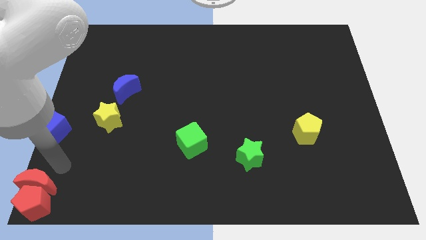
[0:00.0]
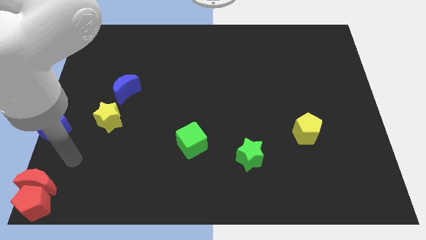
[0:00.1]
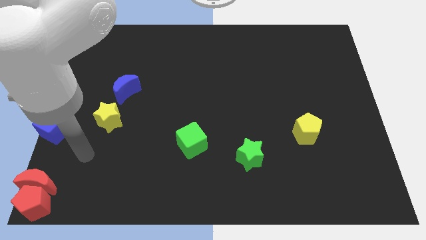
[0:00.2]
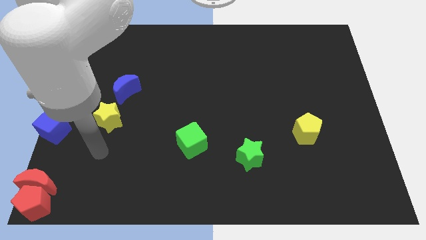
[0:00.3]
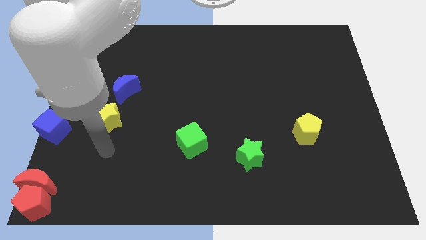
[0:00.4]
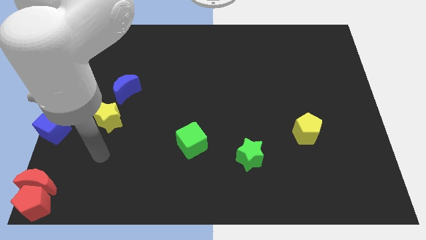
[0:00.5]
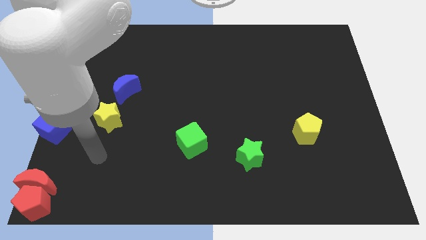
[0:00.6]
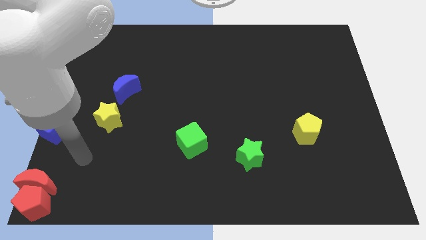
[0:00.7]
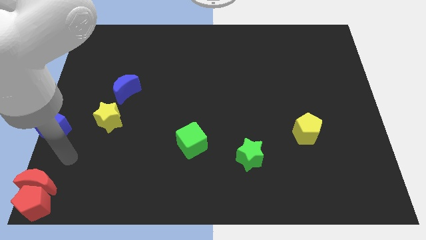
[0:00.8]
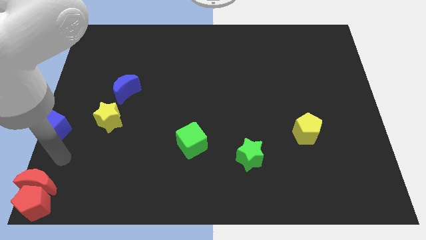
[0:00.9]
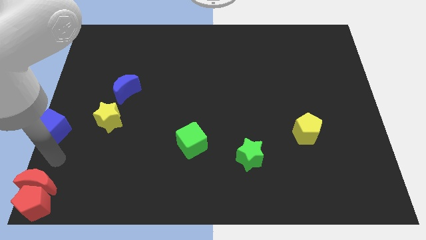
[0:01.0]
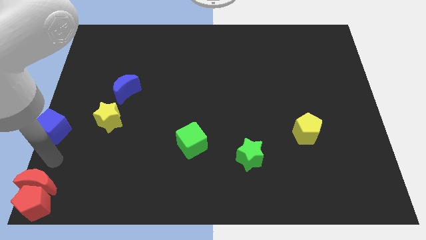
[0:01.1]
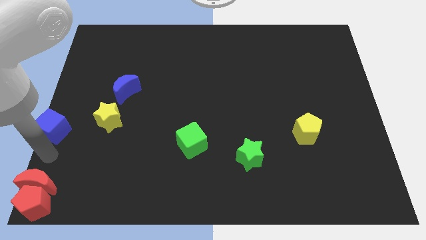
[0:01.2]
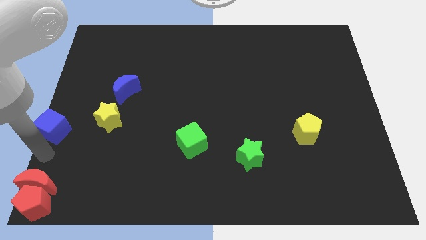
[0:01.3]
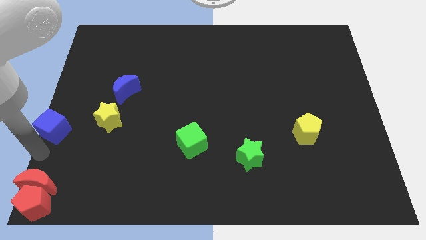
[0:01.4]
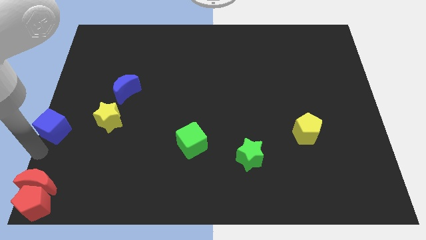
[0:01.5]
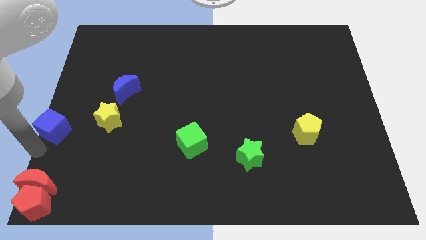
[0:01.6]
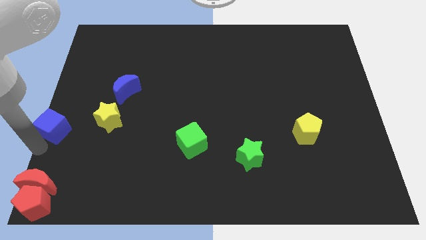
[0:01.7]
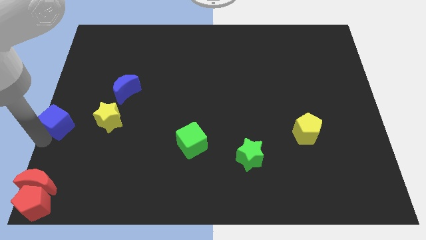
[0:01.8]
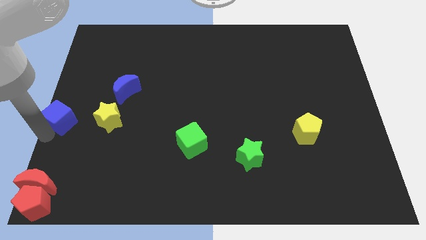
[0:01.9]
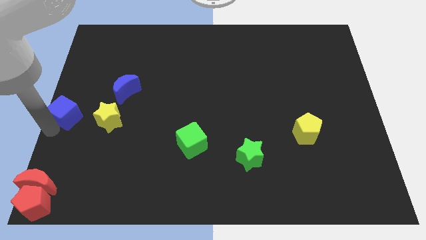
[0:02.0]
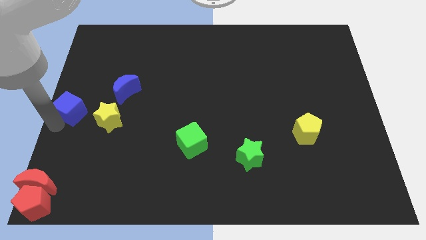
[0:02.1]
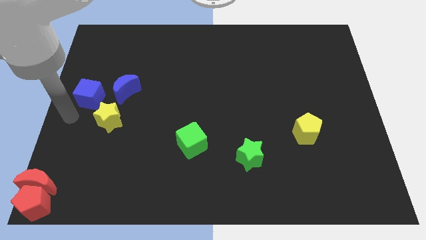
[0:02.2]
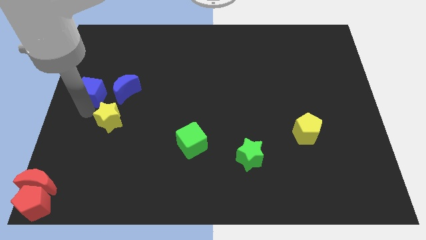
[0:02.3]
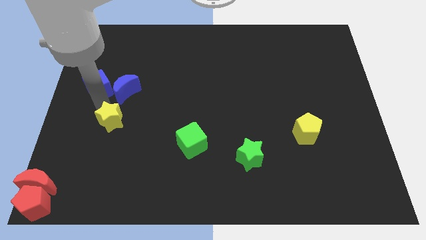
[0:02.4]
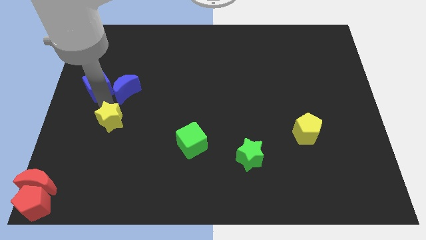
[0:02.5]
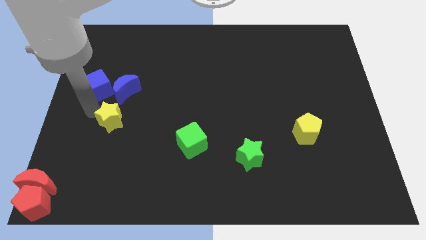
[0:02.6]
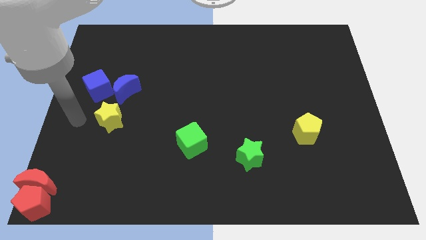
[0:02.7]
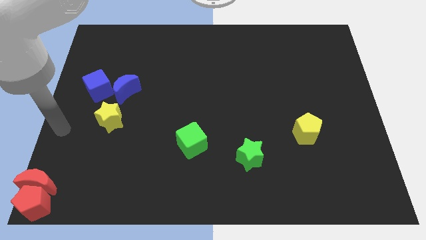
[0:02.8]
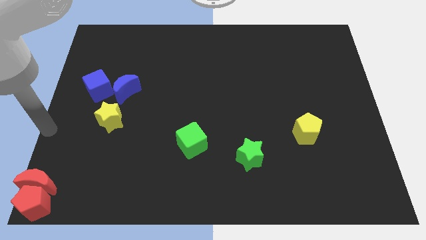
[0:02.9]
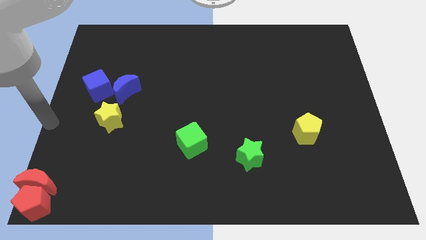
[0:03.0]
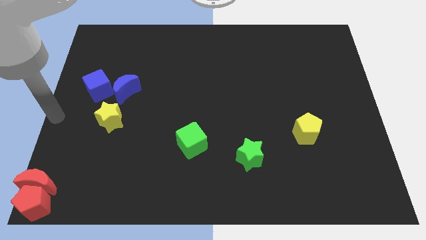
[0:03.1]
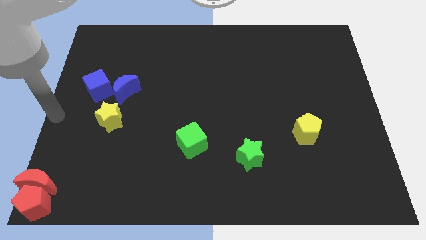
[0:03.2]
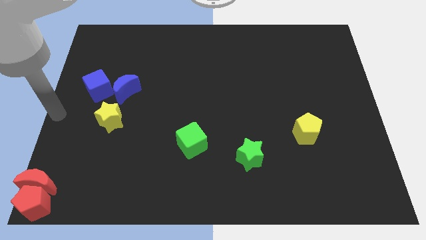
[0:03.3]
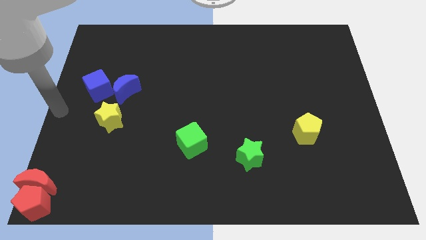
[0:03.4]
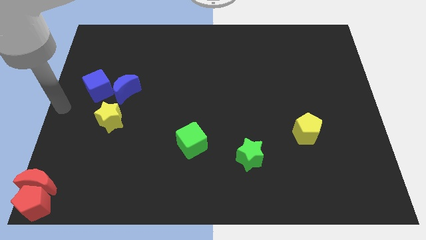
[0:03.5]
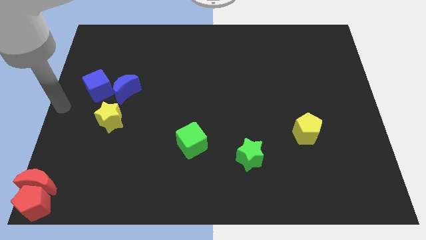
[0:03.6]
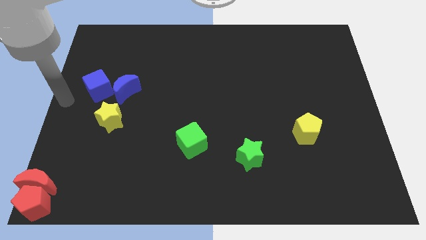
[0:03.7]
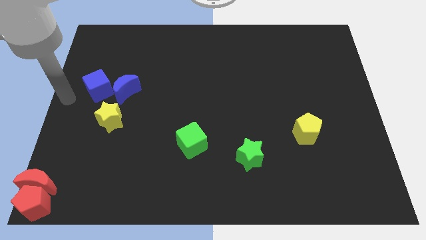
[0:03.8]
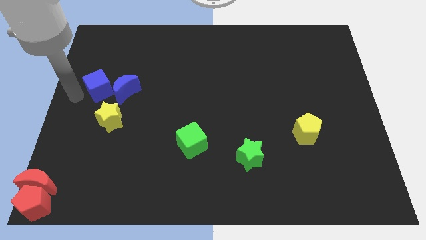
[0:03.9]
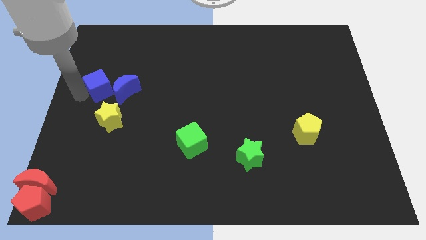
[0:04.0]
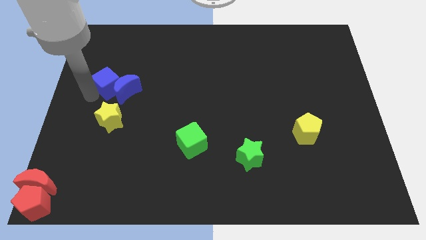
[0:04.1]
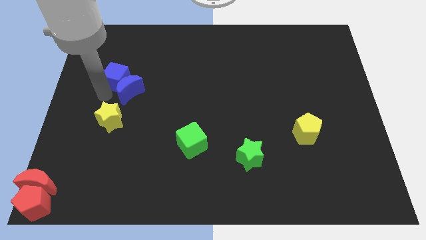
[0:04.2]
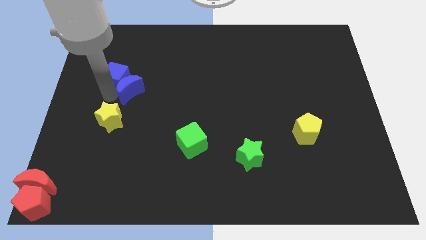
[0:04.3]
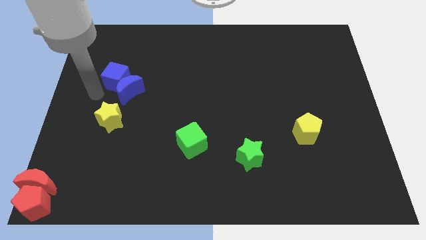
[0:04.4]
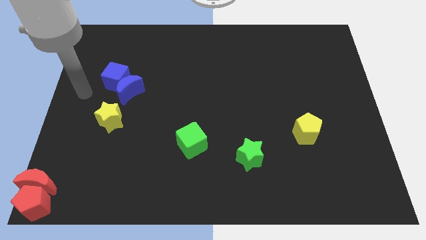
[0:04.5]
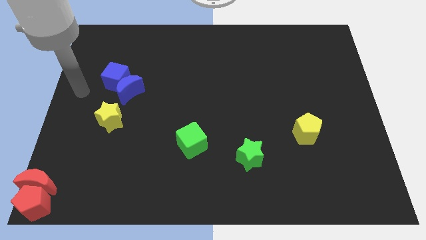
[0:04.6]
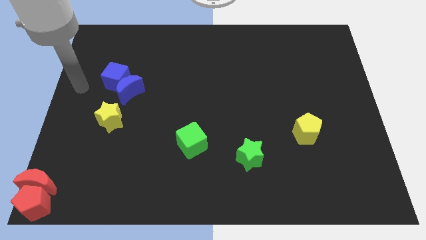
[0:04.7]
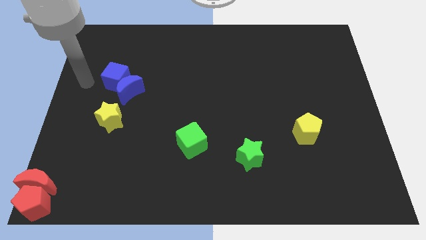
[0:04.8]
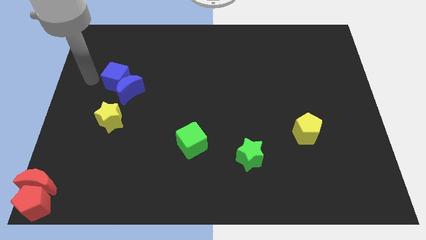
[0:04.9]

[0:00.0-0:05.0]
place the blue cube on top of the blue crescent

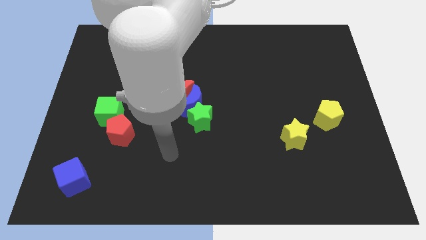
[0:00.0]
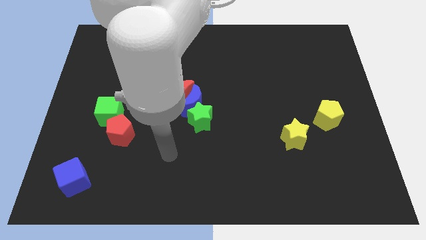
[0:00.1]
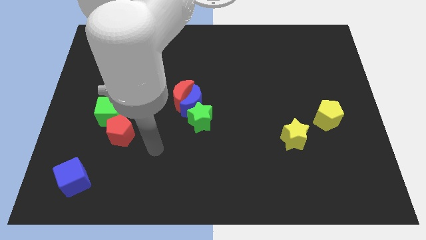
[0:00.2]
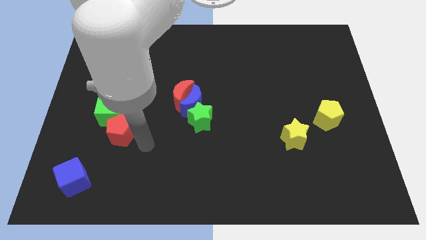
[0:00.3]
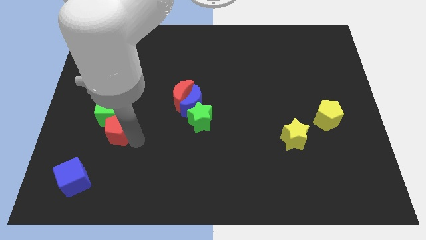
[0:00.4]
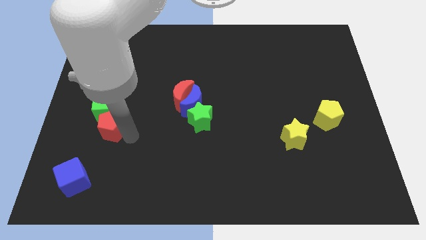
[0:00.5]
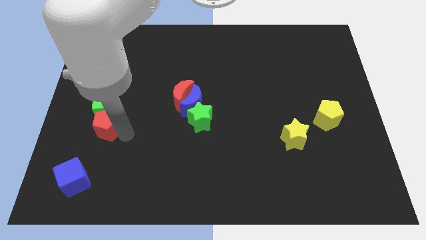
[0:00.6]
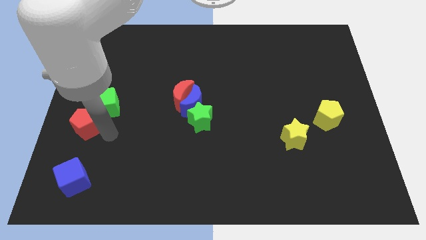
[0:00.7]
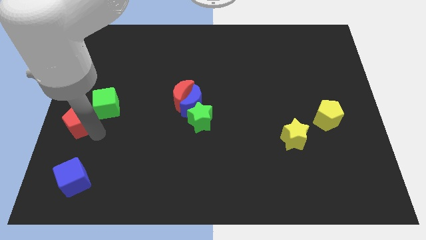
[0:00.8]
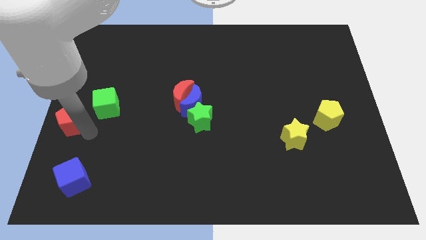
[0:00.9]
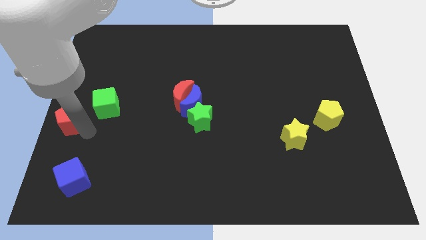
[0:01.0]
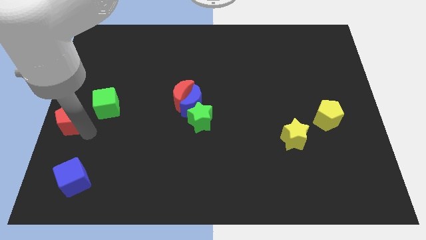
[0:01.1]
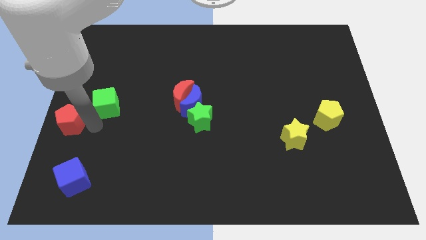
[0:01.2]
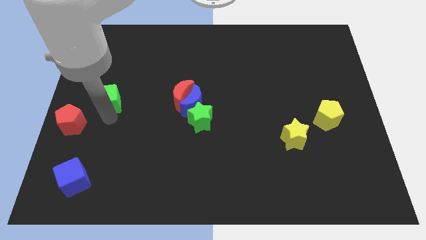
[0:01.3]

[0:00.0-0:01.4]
separate green cube from red pentagon

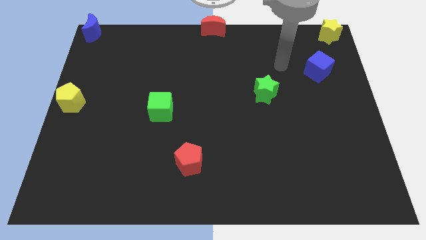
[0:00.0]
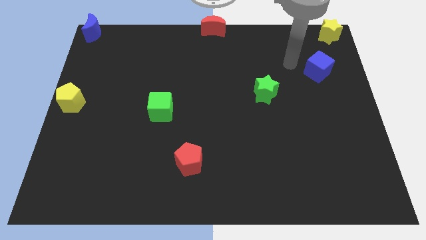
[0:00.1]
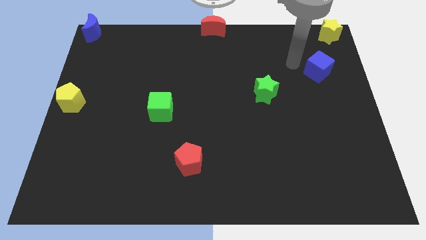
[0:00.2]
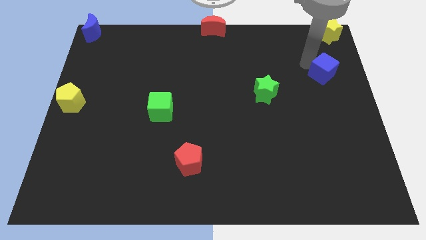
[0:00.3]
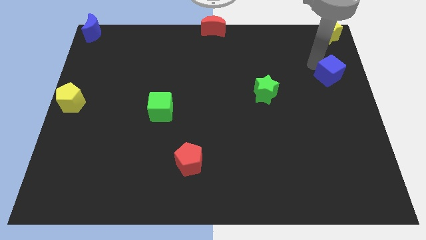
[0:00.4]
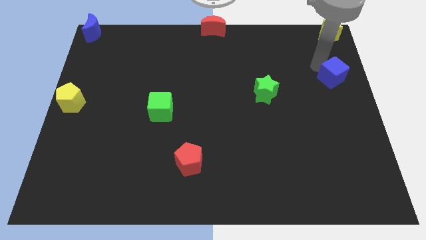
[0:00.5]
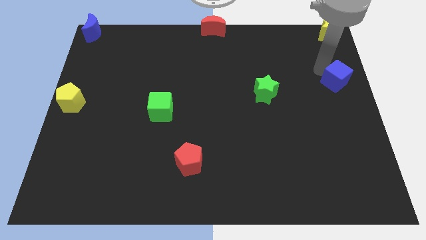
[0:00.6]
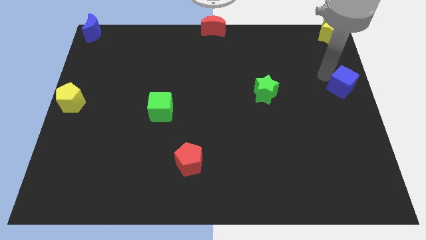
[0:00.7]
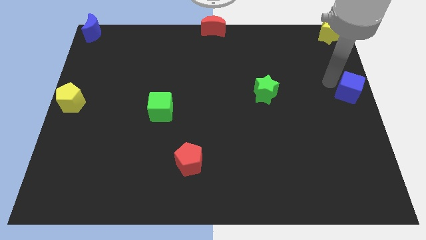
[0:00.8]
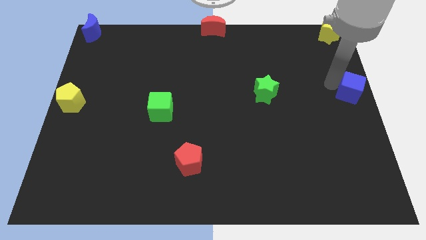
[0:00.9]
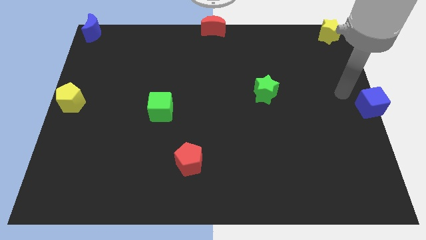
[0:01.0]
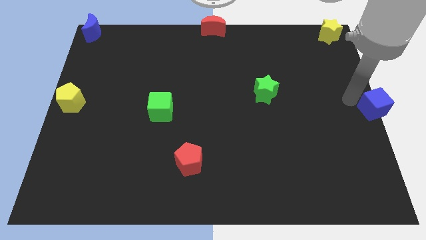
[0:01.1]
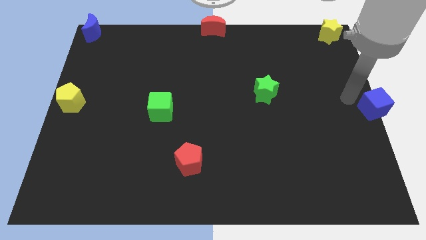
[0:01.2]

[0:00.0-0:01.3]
push the blue cube to the center right of the board

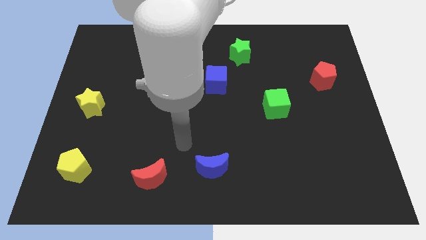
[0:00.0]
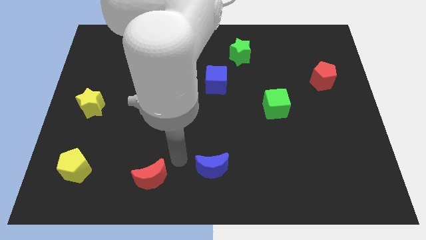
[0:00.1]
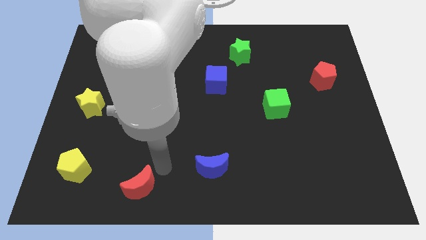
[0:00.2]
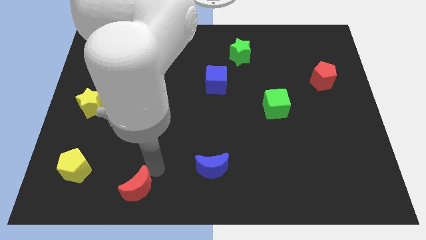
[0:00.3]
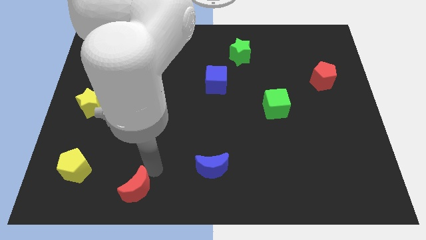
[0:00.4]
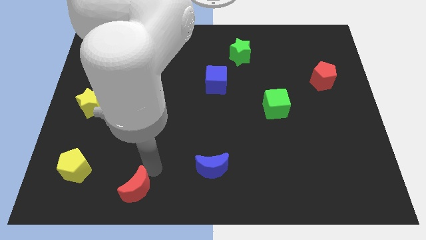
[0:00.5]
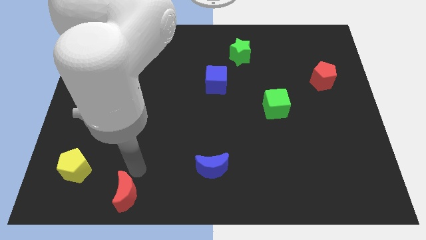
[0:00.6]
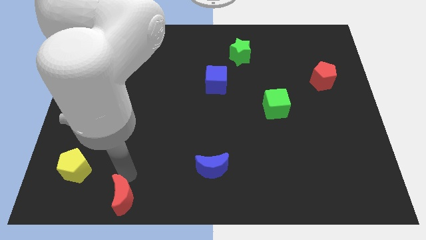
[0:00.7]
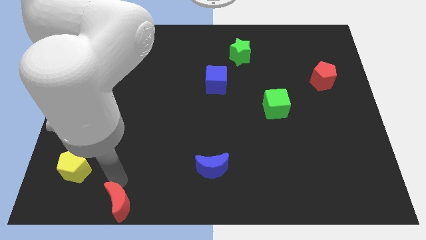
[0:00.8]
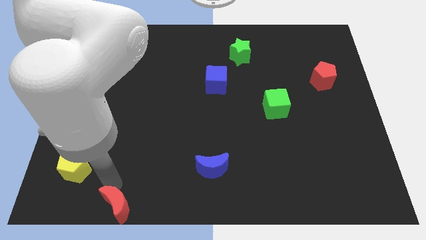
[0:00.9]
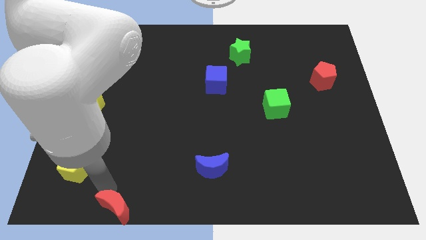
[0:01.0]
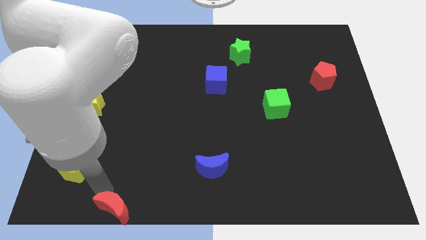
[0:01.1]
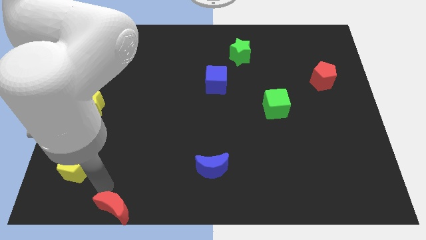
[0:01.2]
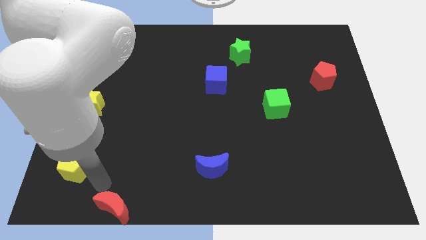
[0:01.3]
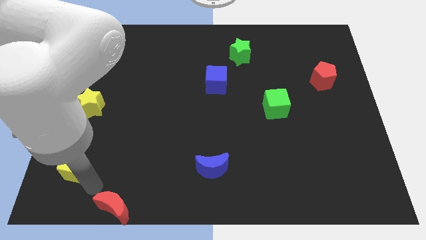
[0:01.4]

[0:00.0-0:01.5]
move the red crescent to the bottom right of the yellow pentagon
